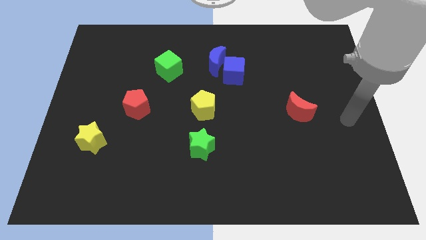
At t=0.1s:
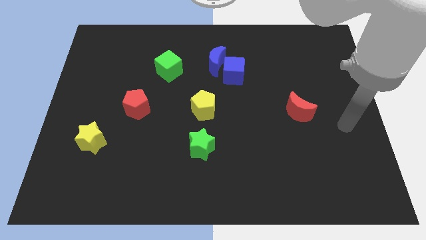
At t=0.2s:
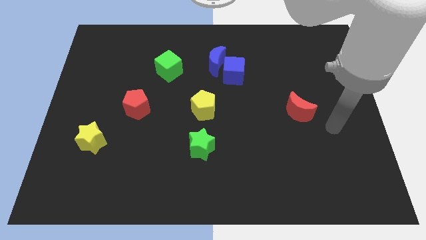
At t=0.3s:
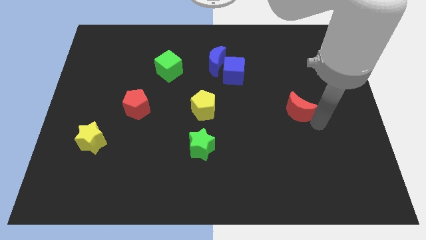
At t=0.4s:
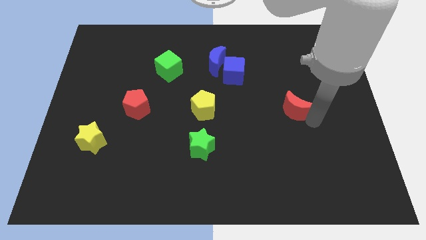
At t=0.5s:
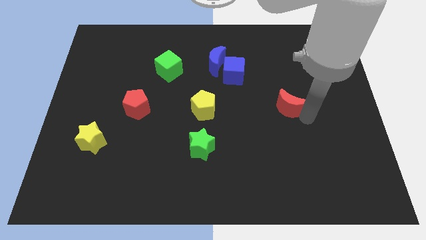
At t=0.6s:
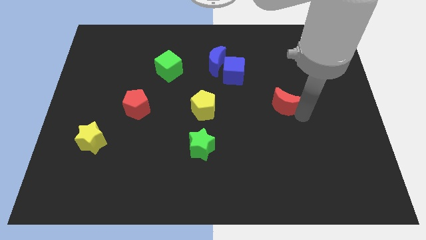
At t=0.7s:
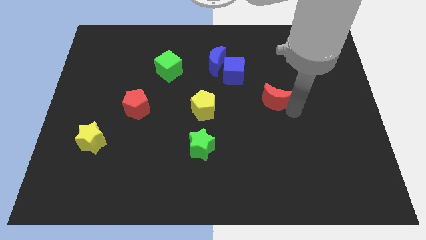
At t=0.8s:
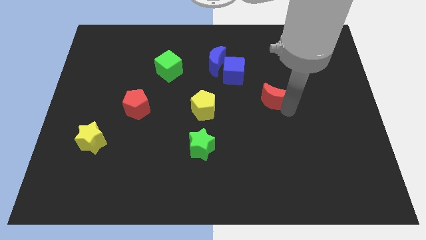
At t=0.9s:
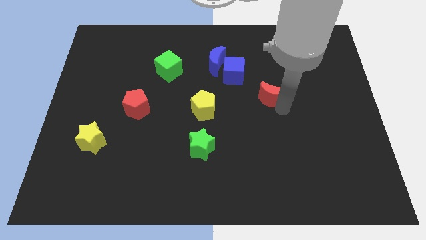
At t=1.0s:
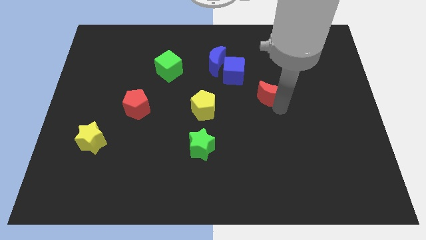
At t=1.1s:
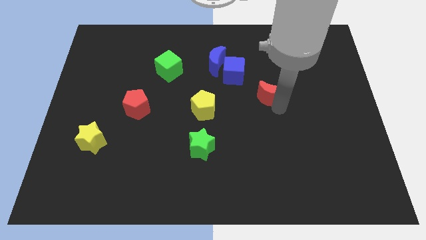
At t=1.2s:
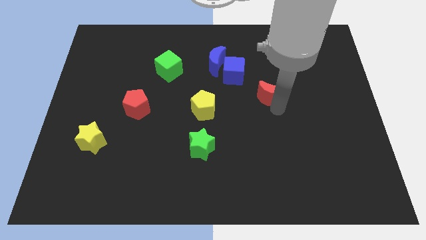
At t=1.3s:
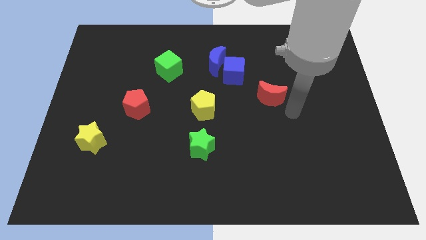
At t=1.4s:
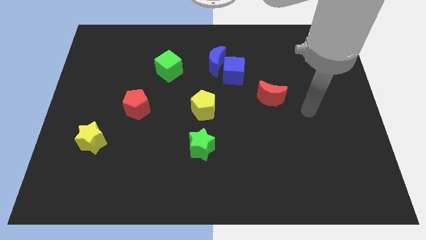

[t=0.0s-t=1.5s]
slide the red crescent slightly towards the blue cube

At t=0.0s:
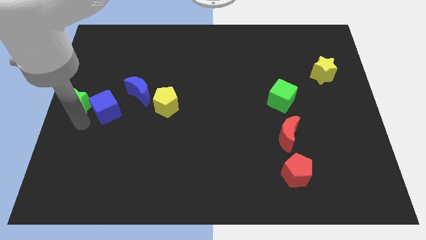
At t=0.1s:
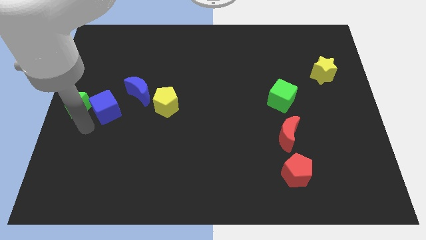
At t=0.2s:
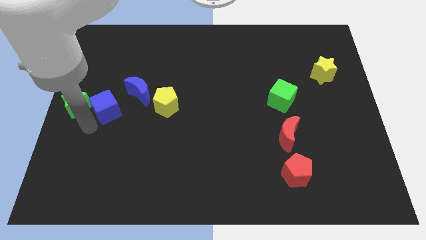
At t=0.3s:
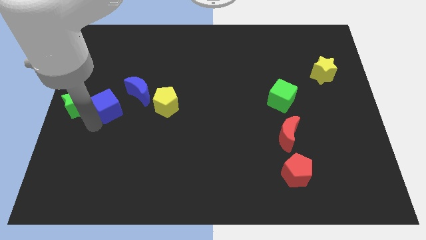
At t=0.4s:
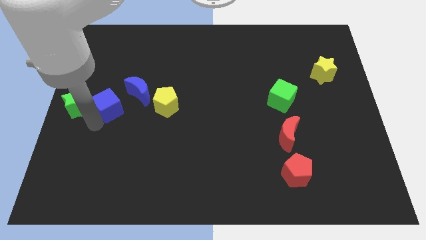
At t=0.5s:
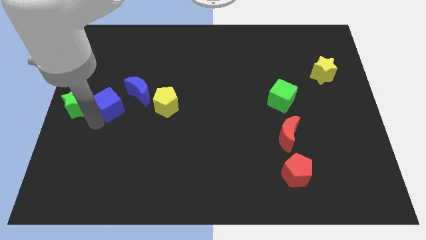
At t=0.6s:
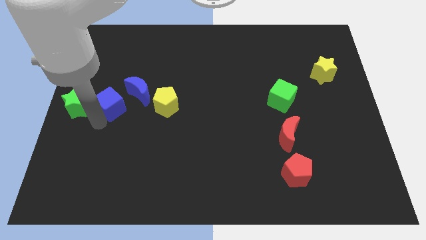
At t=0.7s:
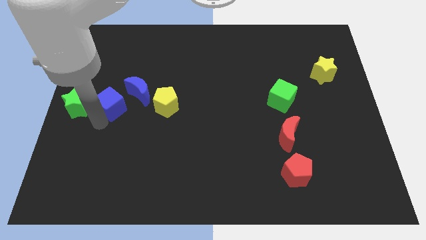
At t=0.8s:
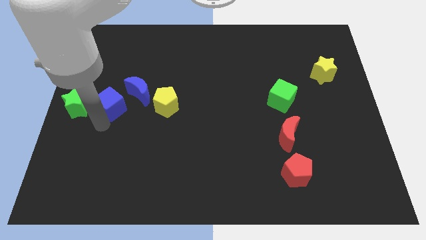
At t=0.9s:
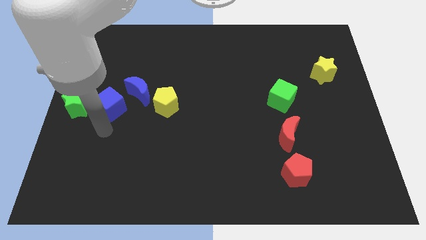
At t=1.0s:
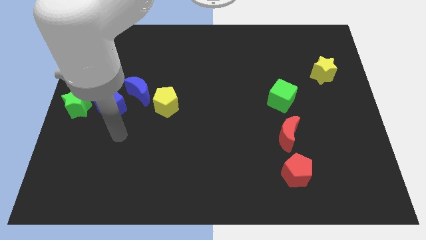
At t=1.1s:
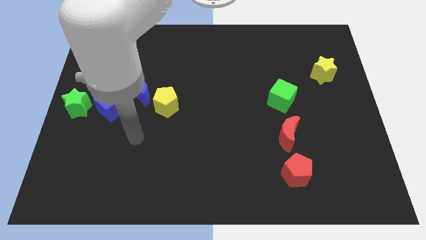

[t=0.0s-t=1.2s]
tap the blue cube at the bottom side

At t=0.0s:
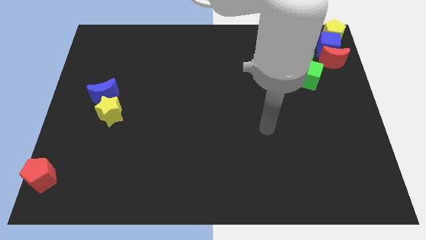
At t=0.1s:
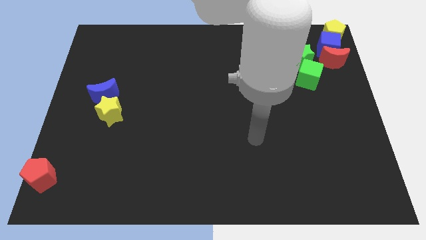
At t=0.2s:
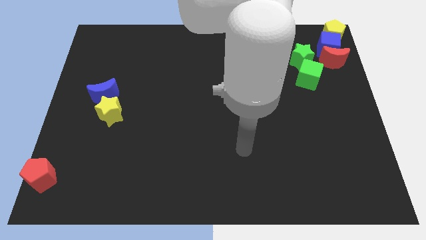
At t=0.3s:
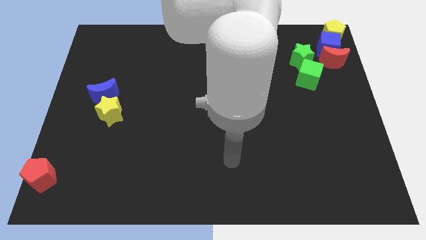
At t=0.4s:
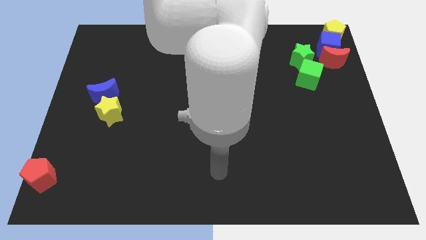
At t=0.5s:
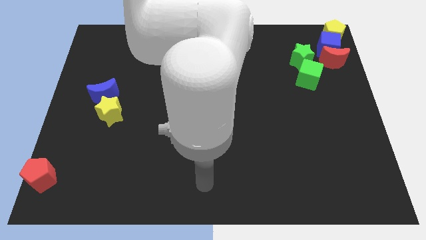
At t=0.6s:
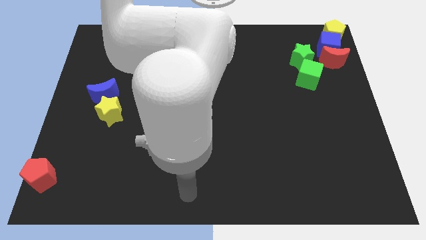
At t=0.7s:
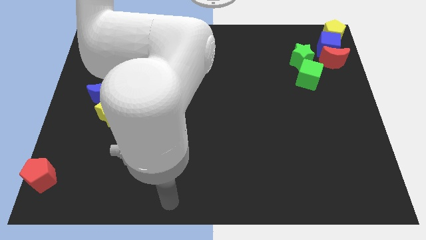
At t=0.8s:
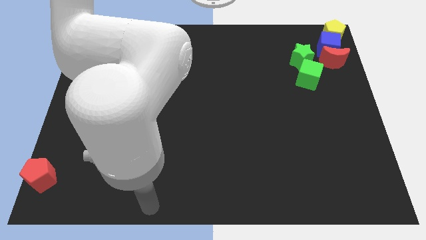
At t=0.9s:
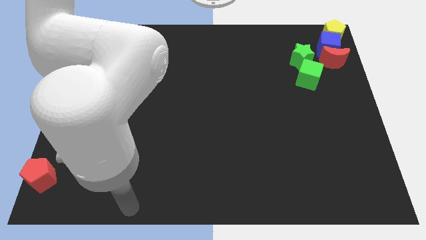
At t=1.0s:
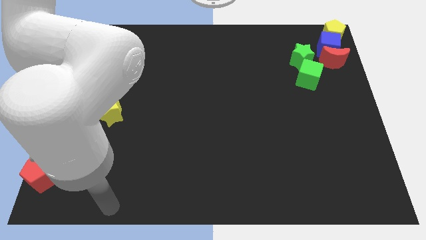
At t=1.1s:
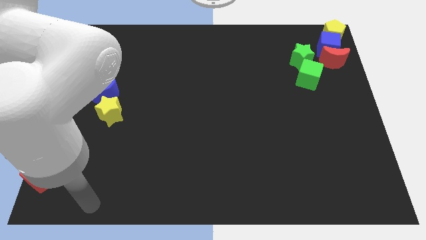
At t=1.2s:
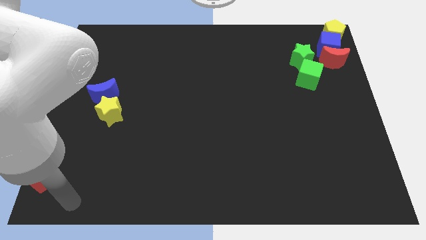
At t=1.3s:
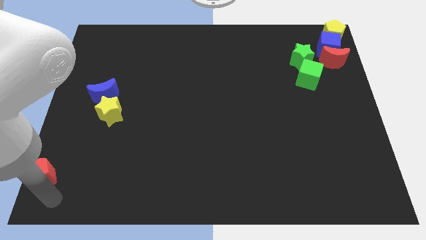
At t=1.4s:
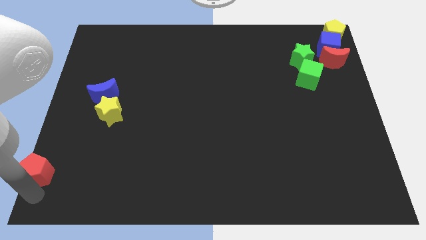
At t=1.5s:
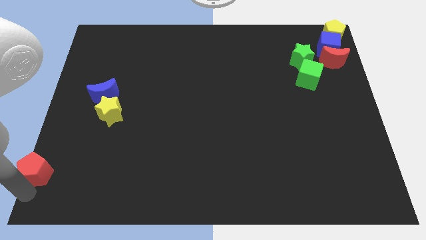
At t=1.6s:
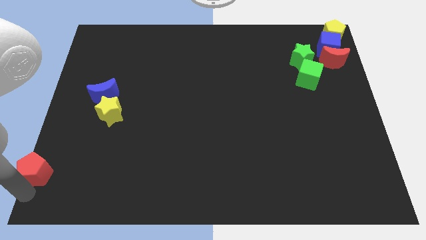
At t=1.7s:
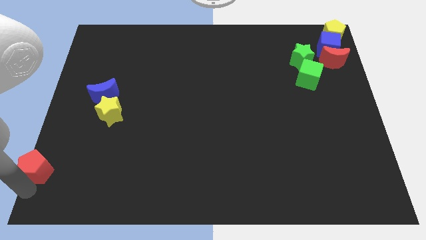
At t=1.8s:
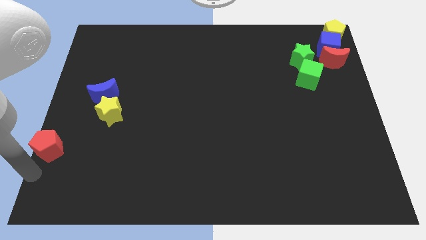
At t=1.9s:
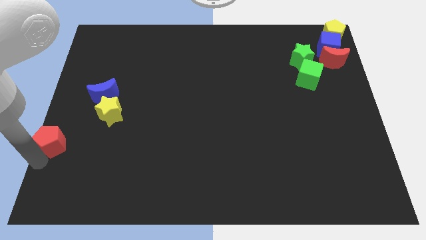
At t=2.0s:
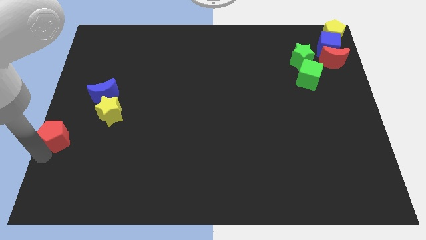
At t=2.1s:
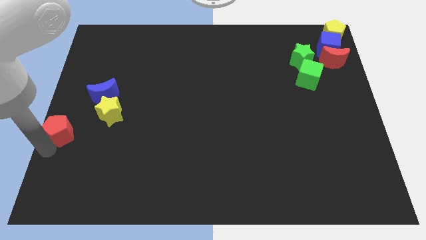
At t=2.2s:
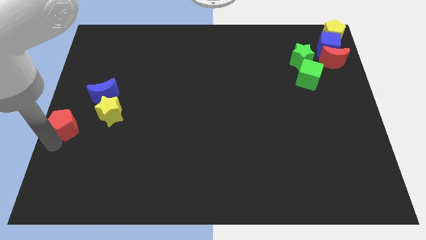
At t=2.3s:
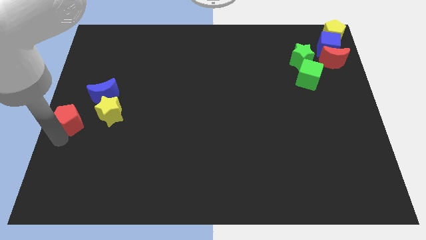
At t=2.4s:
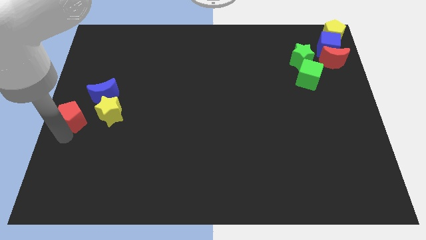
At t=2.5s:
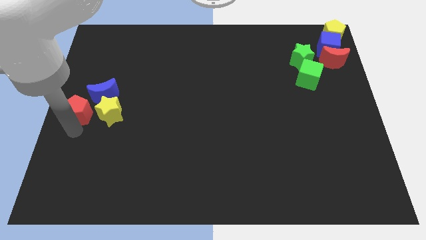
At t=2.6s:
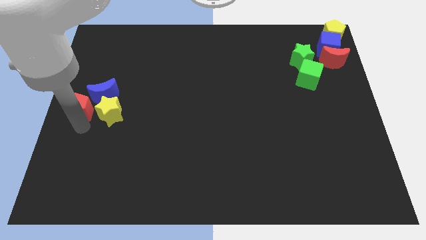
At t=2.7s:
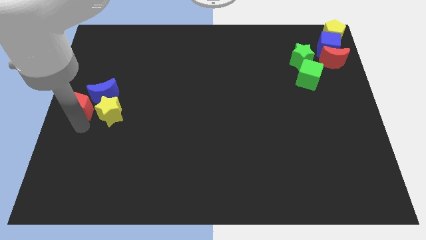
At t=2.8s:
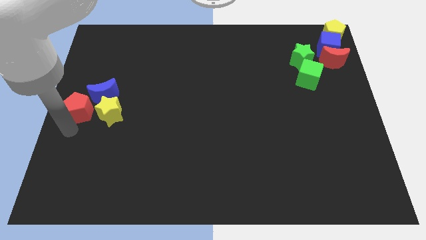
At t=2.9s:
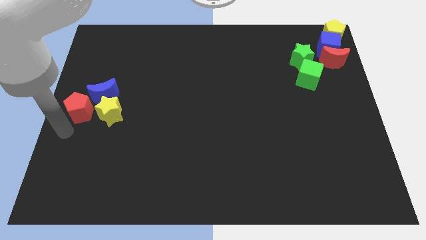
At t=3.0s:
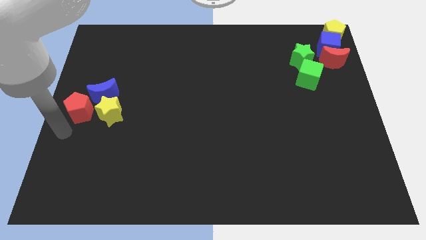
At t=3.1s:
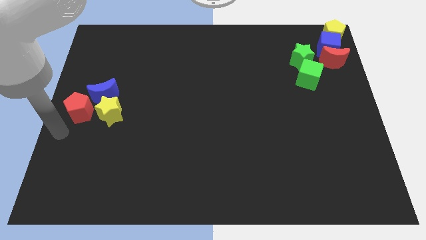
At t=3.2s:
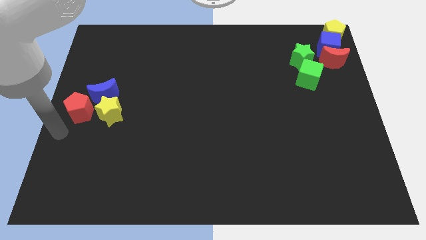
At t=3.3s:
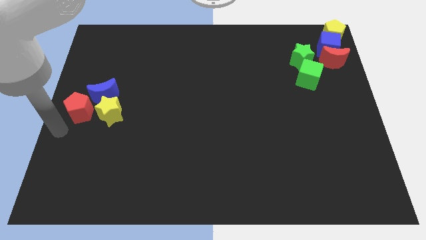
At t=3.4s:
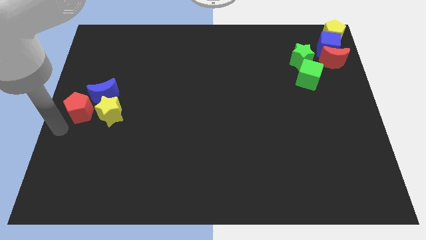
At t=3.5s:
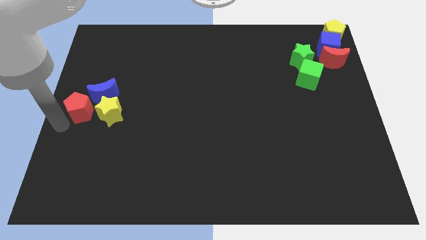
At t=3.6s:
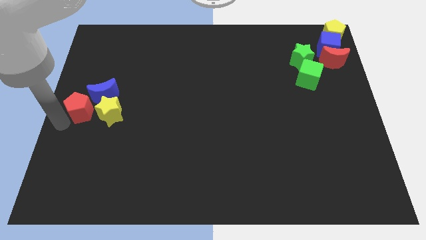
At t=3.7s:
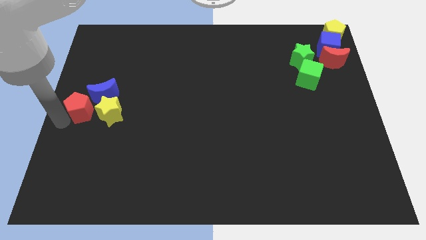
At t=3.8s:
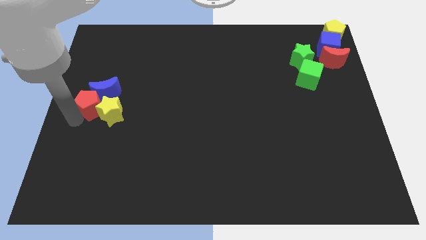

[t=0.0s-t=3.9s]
move the red pentagon into the blue crescent and the yellow star

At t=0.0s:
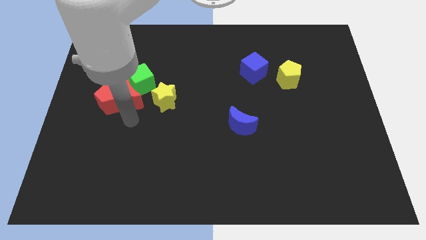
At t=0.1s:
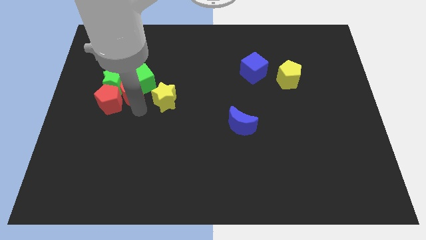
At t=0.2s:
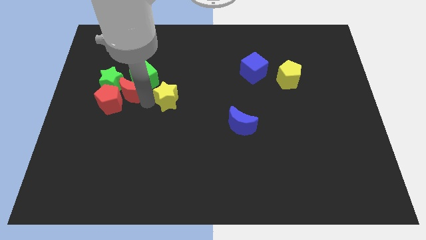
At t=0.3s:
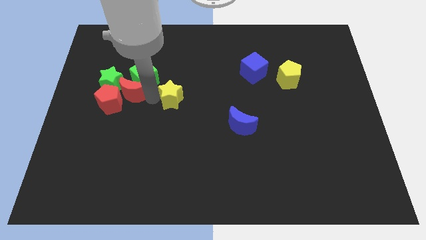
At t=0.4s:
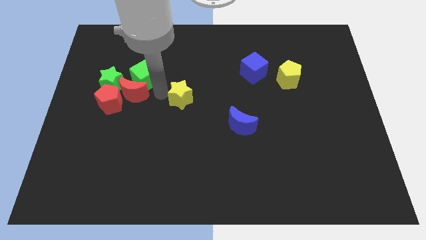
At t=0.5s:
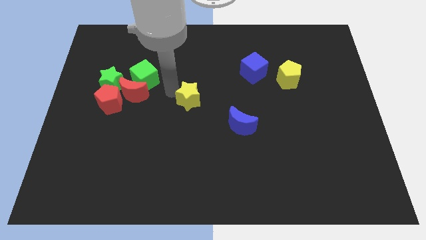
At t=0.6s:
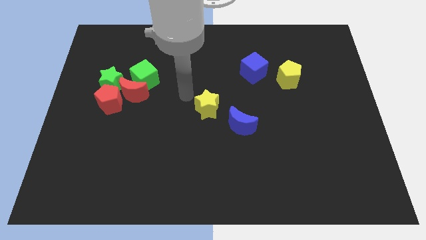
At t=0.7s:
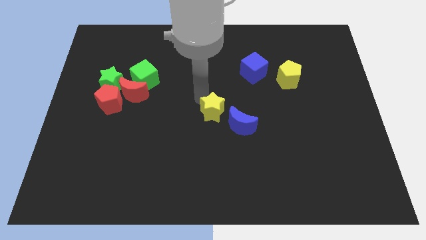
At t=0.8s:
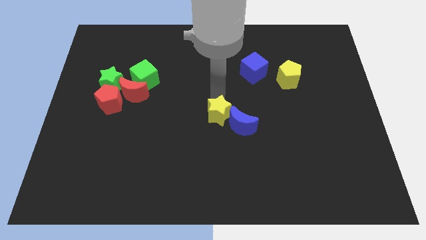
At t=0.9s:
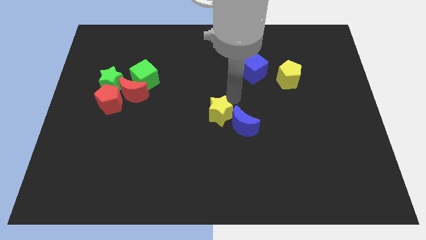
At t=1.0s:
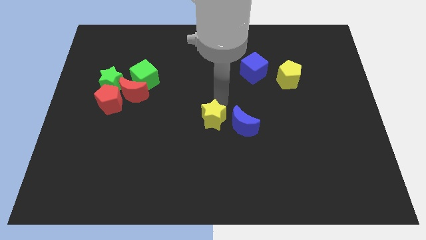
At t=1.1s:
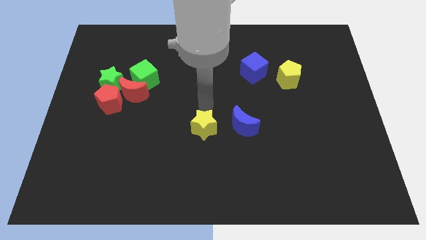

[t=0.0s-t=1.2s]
place the yellow star at the left side of the blue moon

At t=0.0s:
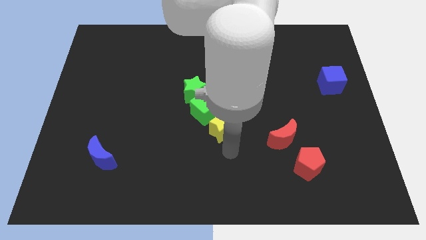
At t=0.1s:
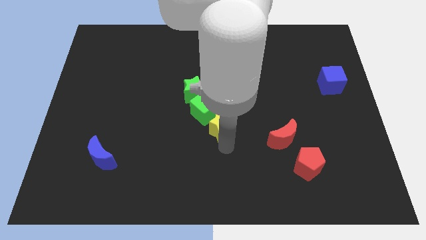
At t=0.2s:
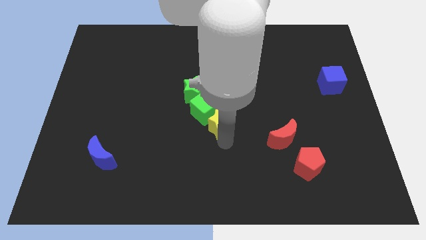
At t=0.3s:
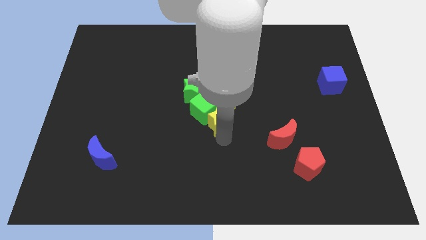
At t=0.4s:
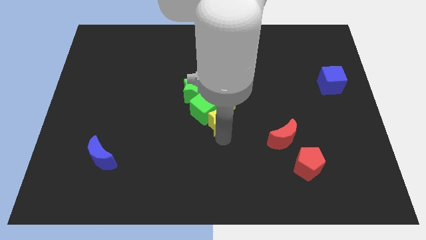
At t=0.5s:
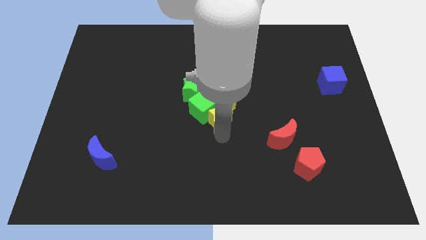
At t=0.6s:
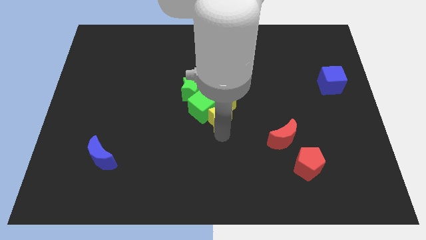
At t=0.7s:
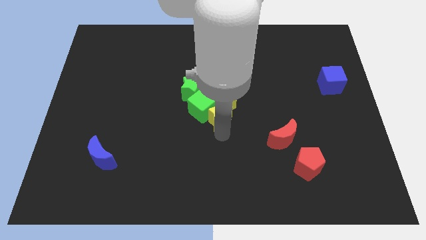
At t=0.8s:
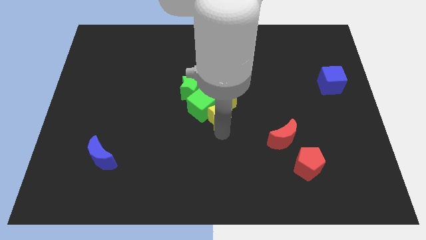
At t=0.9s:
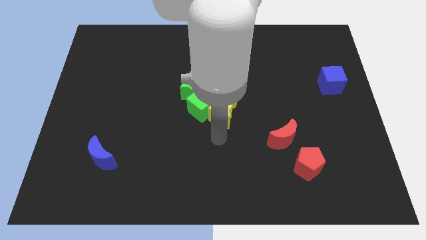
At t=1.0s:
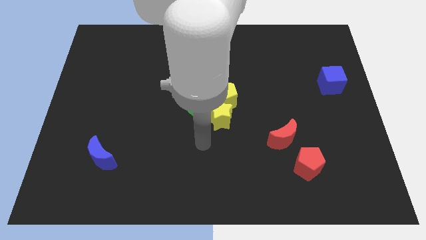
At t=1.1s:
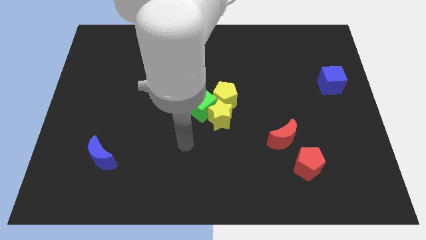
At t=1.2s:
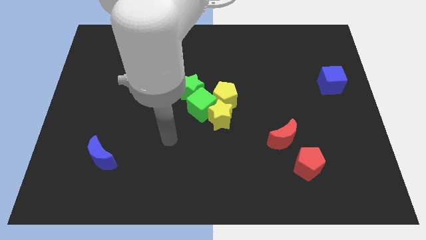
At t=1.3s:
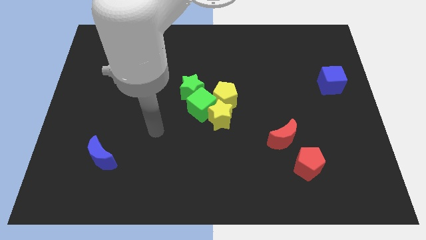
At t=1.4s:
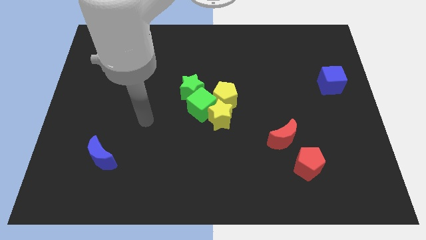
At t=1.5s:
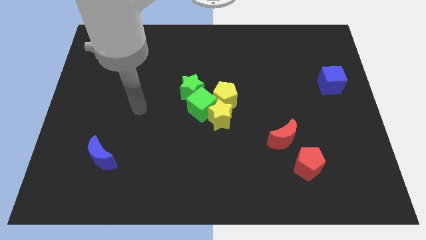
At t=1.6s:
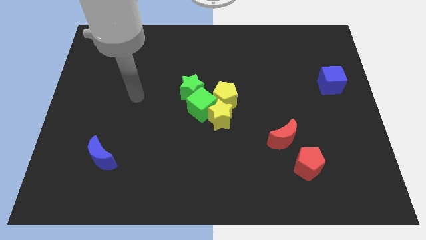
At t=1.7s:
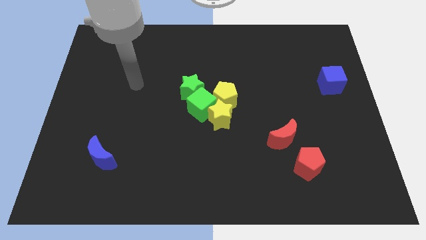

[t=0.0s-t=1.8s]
push the yellow star close to the yellow pentagon
